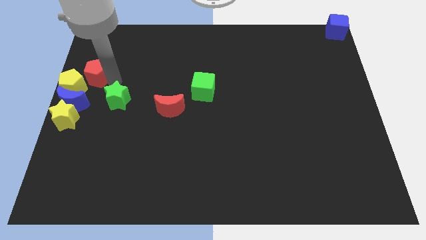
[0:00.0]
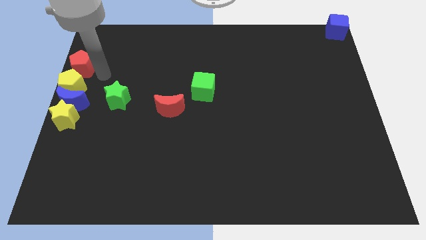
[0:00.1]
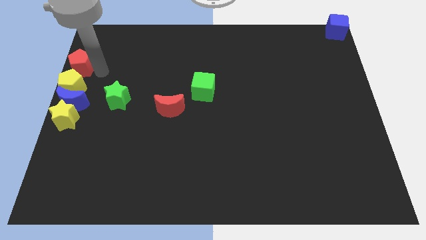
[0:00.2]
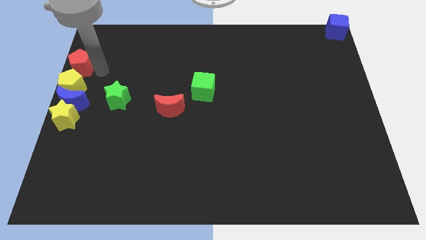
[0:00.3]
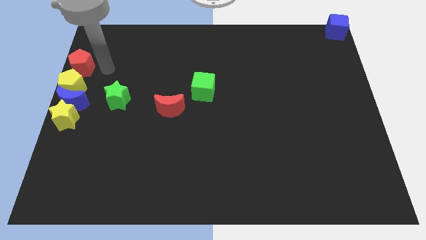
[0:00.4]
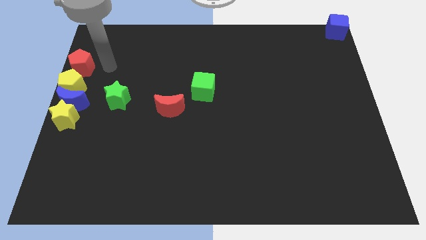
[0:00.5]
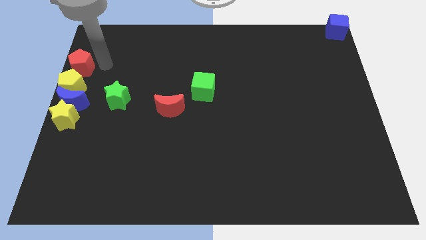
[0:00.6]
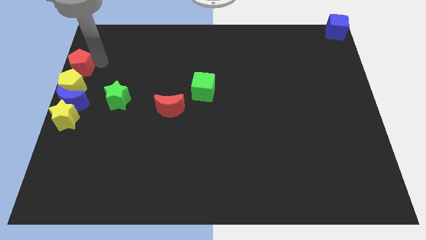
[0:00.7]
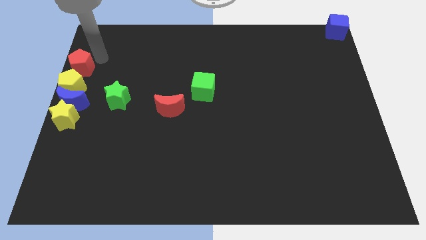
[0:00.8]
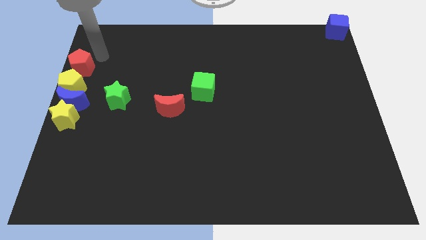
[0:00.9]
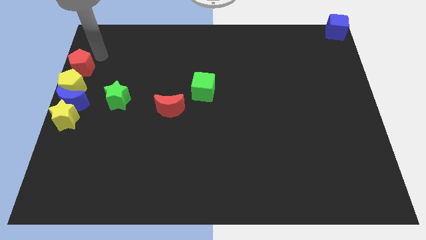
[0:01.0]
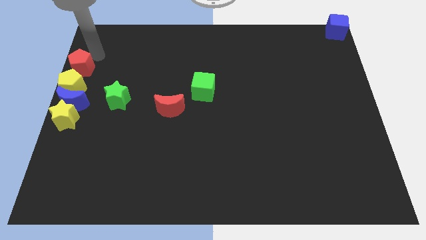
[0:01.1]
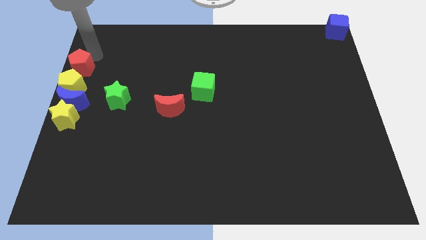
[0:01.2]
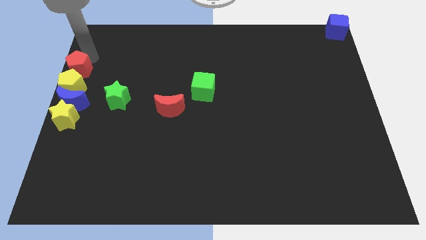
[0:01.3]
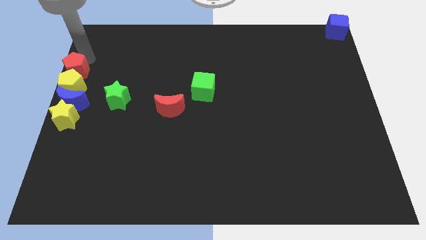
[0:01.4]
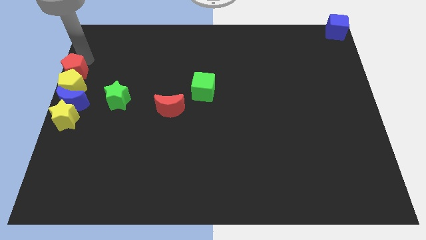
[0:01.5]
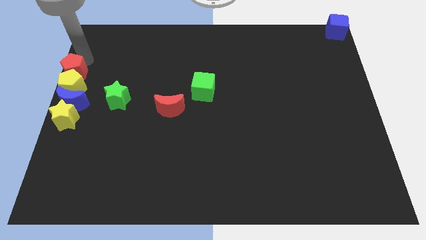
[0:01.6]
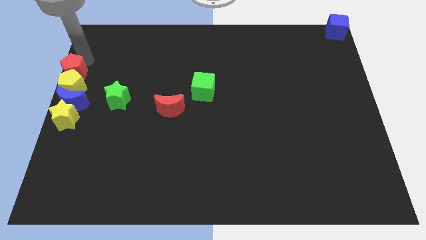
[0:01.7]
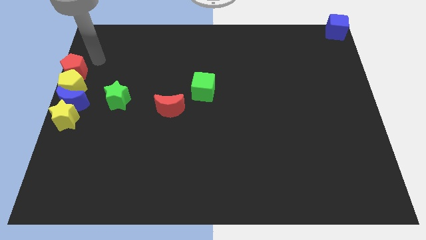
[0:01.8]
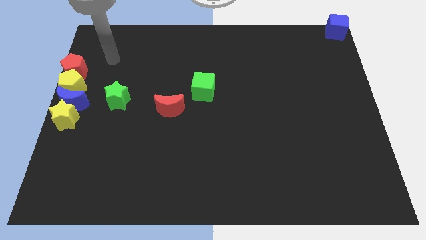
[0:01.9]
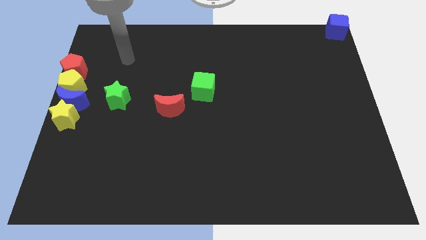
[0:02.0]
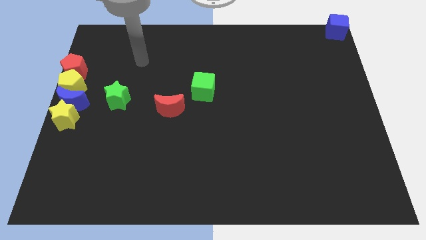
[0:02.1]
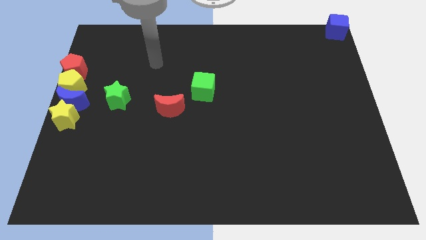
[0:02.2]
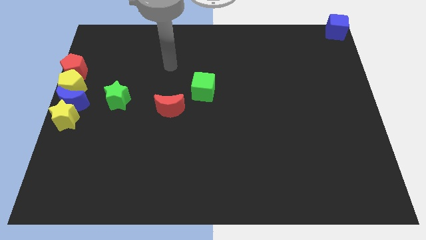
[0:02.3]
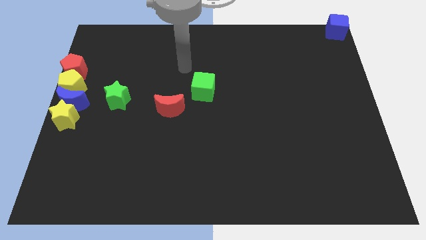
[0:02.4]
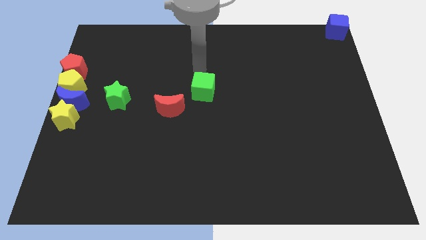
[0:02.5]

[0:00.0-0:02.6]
place the red pentagon at the top of yellow pentagon

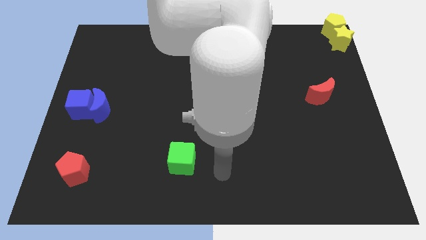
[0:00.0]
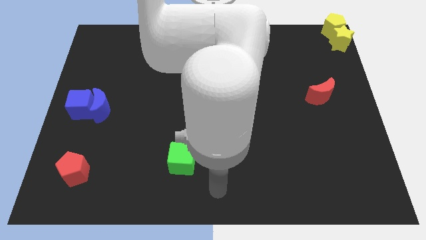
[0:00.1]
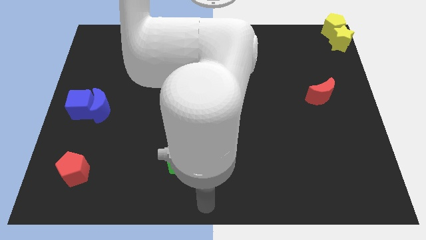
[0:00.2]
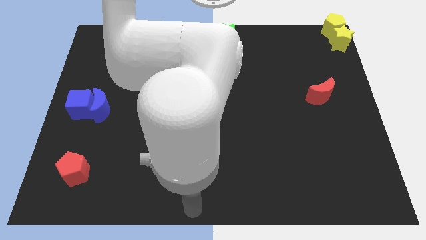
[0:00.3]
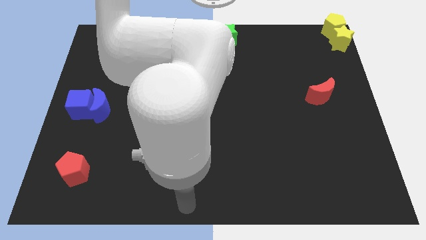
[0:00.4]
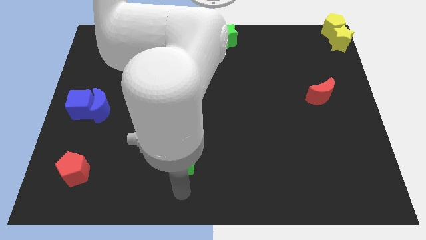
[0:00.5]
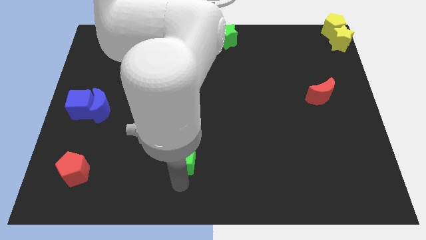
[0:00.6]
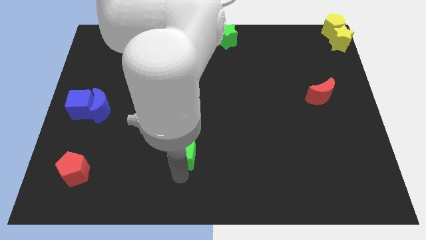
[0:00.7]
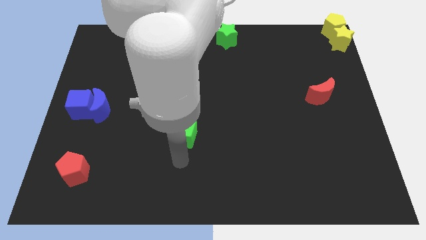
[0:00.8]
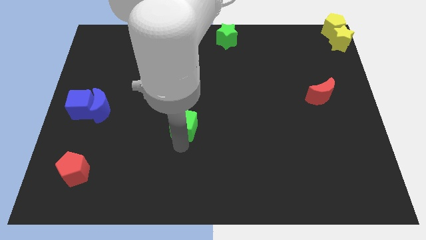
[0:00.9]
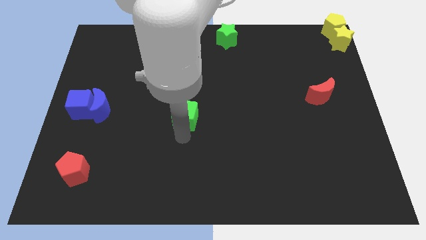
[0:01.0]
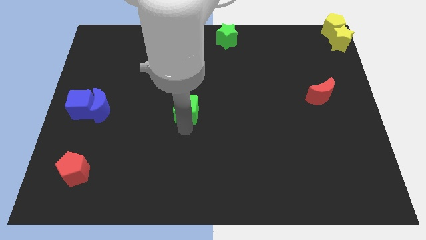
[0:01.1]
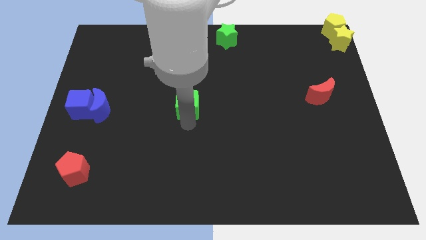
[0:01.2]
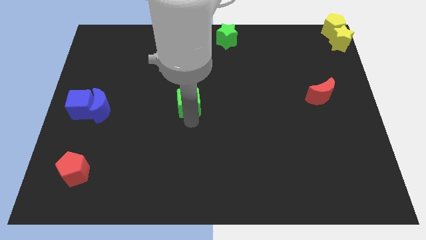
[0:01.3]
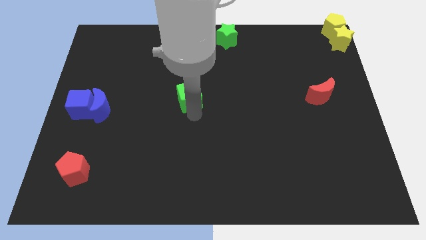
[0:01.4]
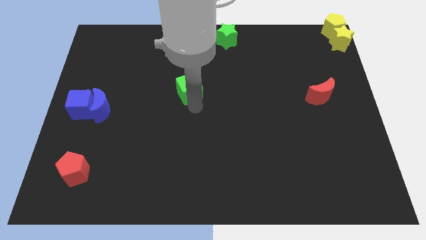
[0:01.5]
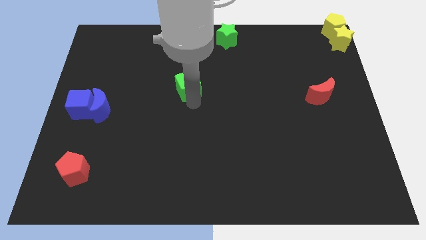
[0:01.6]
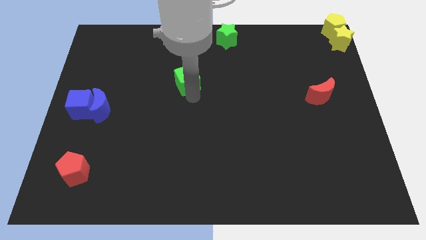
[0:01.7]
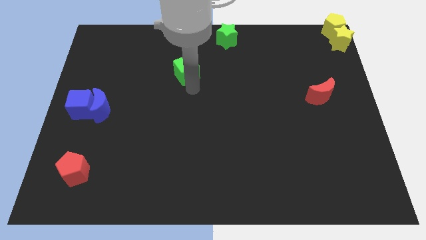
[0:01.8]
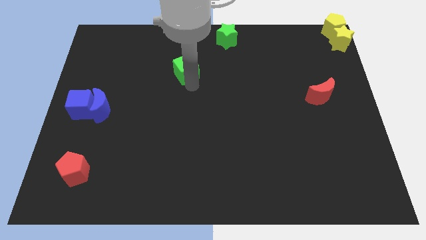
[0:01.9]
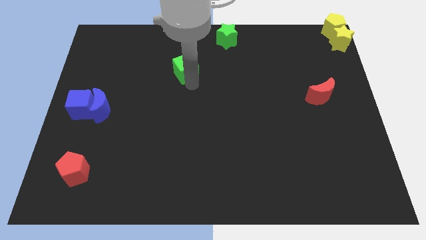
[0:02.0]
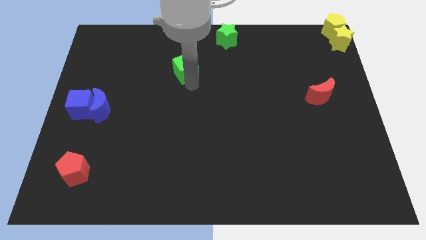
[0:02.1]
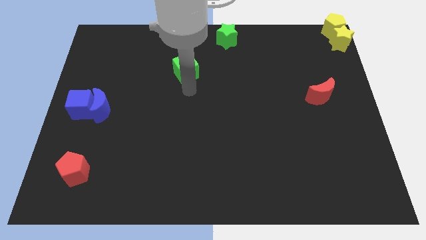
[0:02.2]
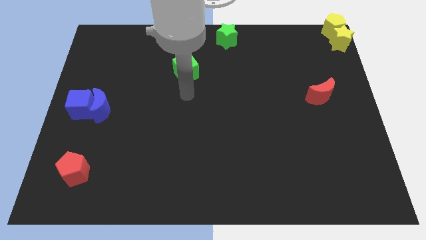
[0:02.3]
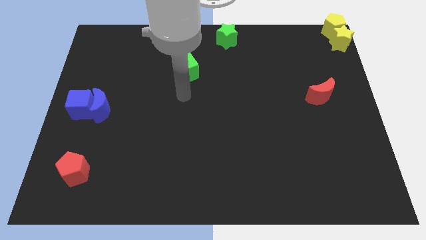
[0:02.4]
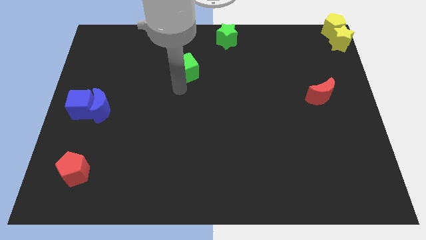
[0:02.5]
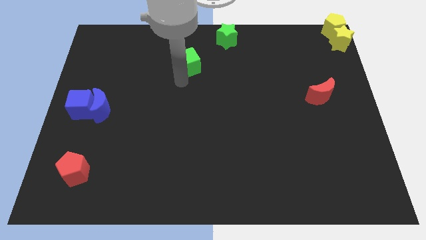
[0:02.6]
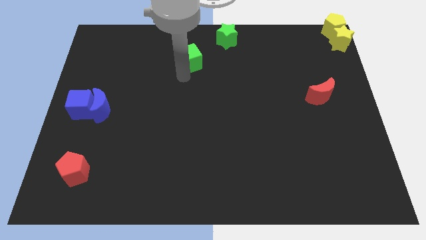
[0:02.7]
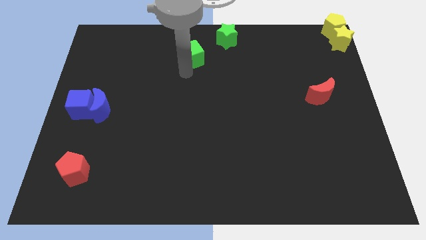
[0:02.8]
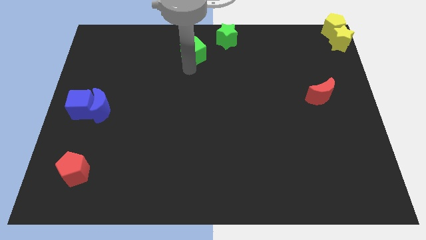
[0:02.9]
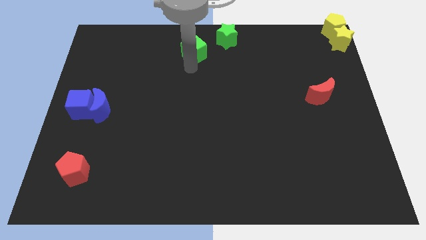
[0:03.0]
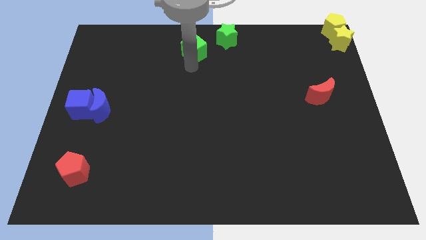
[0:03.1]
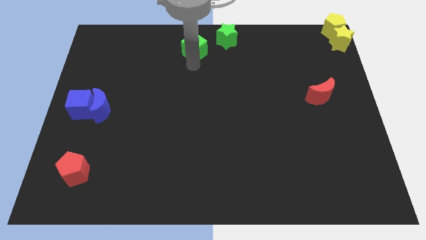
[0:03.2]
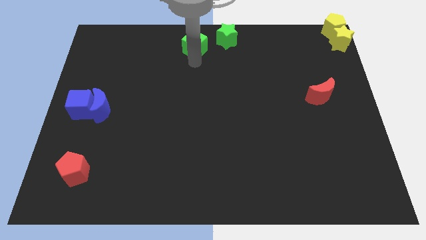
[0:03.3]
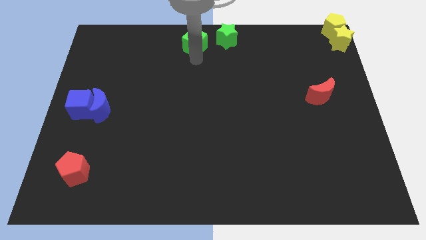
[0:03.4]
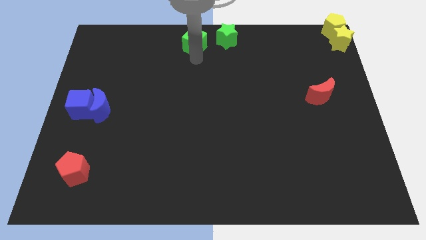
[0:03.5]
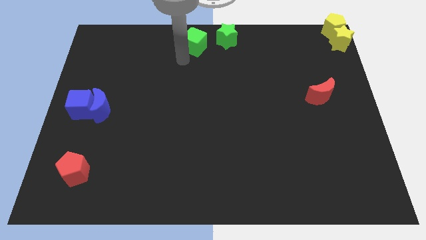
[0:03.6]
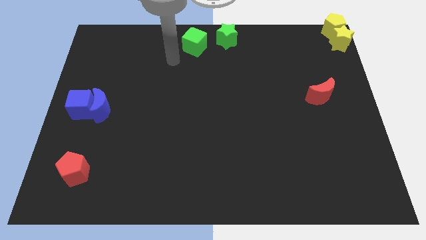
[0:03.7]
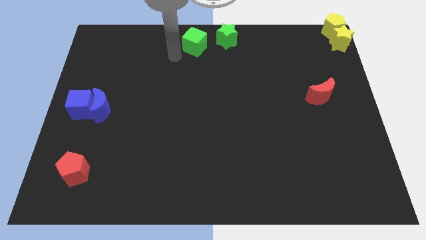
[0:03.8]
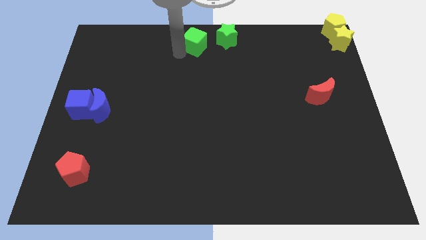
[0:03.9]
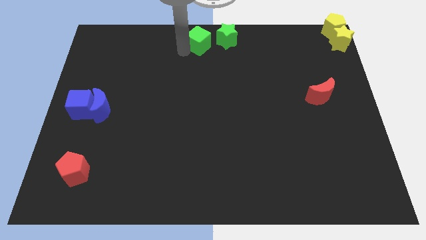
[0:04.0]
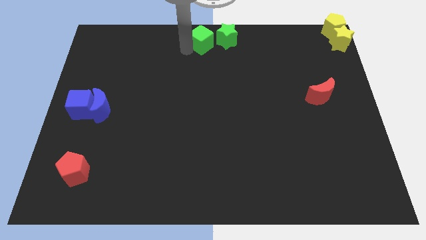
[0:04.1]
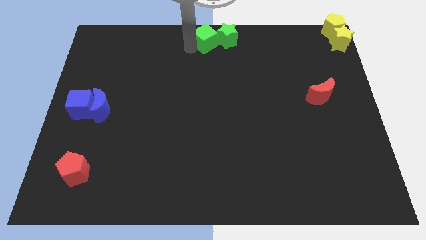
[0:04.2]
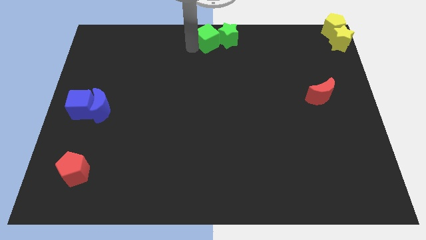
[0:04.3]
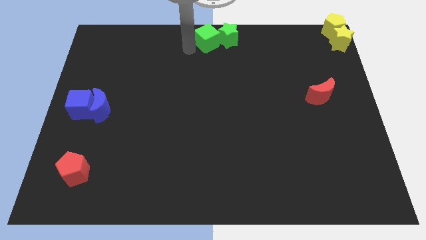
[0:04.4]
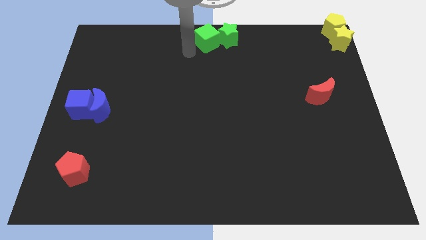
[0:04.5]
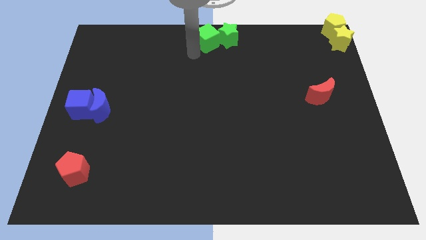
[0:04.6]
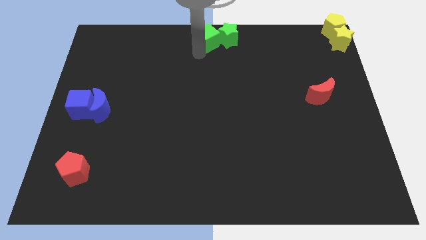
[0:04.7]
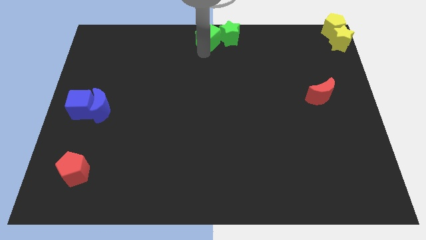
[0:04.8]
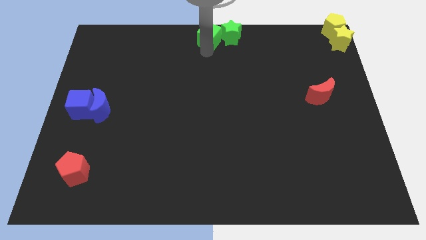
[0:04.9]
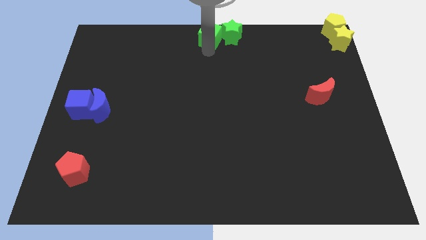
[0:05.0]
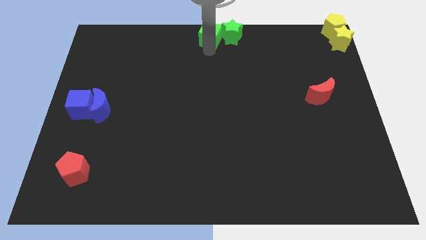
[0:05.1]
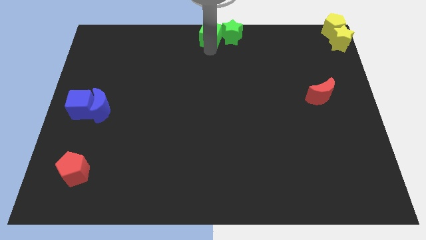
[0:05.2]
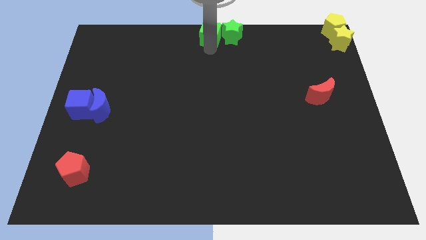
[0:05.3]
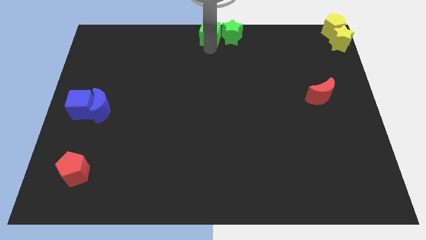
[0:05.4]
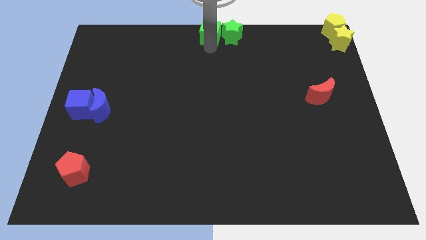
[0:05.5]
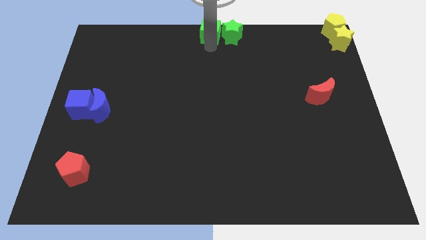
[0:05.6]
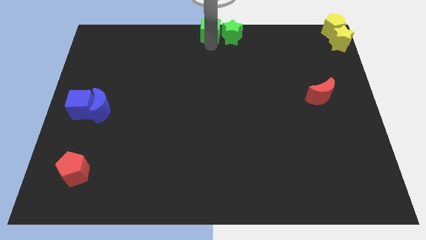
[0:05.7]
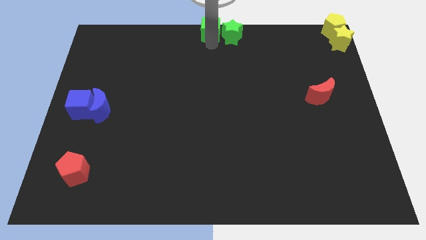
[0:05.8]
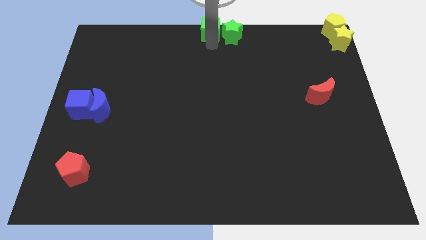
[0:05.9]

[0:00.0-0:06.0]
put the green cube on the left side of the green star

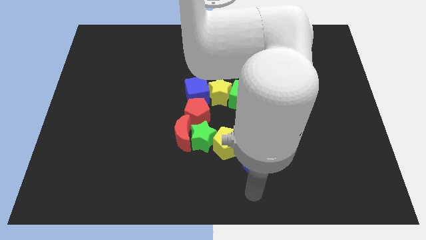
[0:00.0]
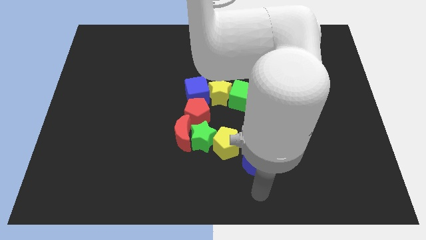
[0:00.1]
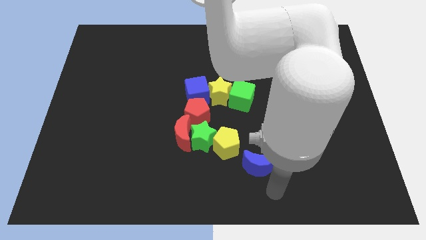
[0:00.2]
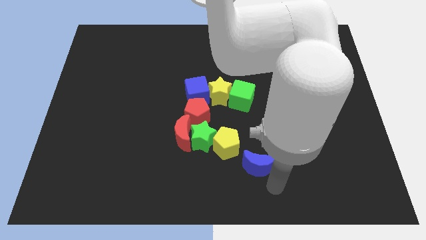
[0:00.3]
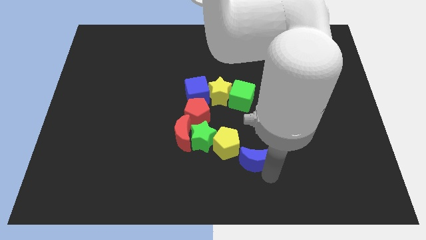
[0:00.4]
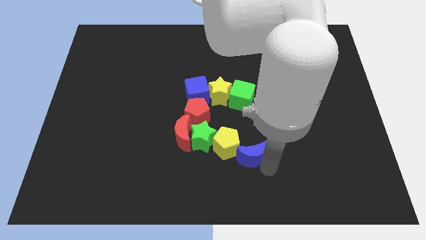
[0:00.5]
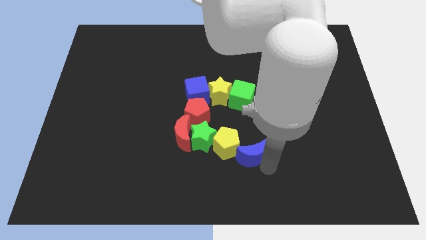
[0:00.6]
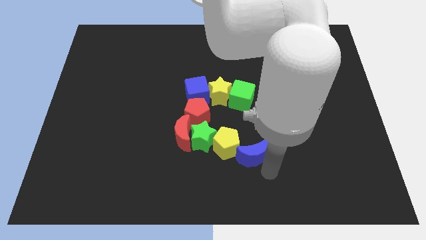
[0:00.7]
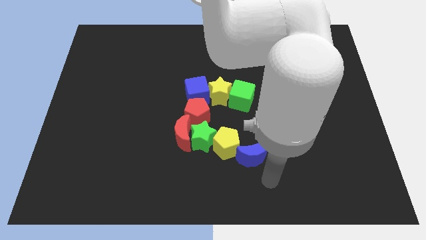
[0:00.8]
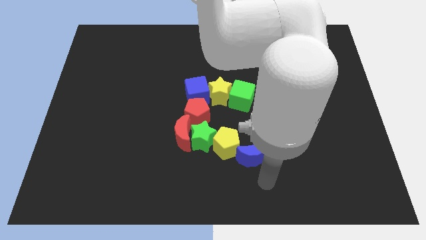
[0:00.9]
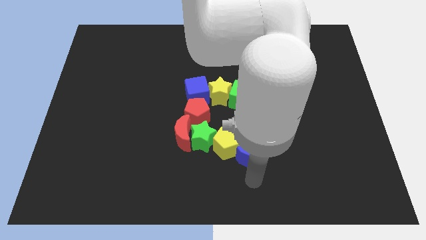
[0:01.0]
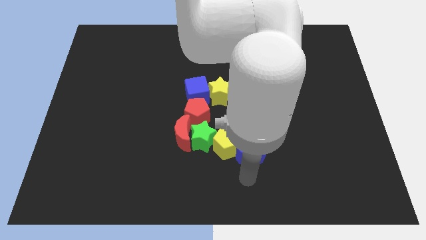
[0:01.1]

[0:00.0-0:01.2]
push the blue crescent to the right of the yellow pentagon
